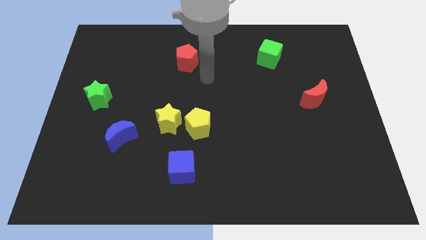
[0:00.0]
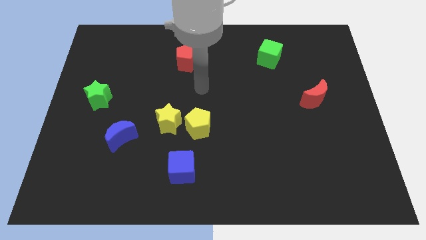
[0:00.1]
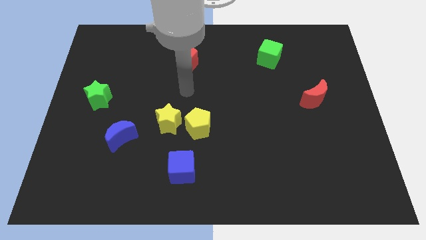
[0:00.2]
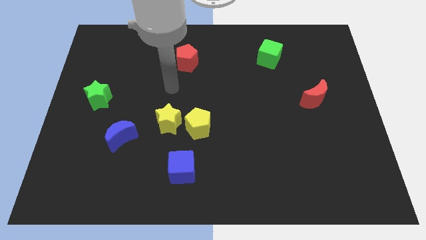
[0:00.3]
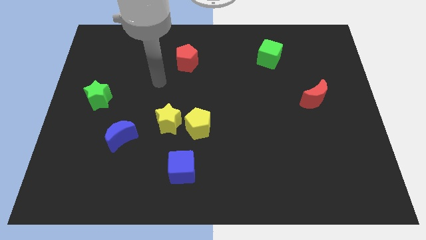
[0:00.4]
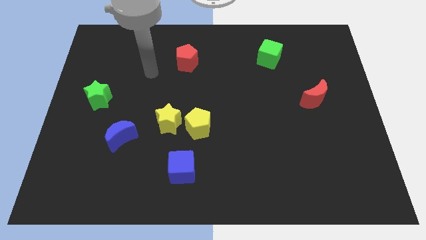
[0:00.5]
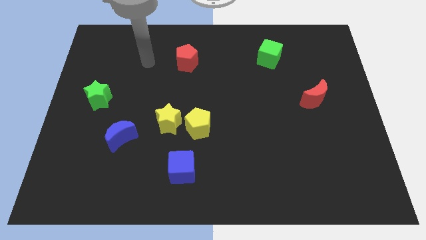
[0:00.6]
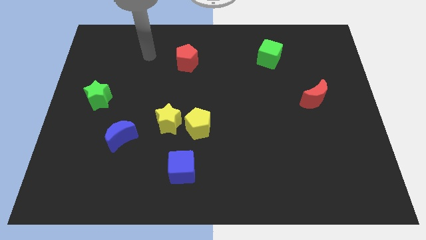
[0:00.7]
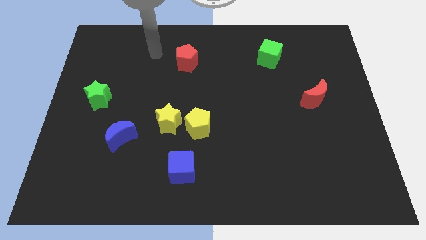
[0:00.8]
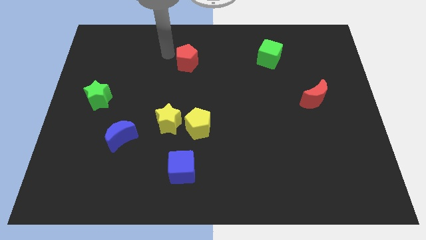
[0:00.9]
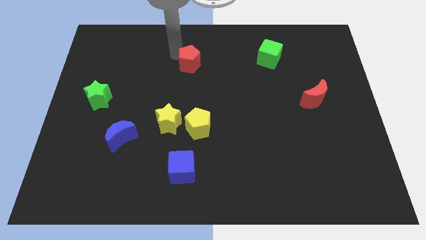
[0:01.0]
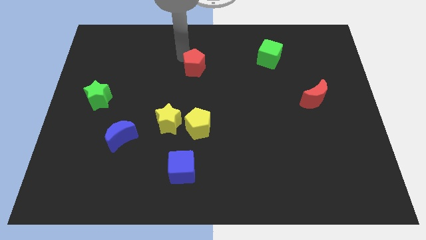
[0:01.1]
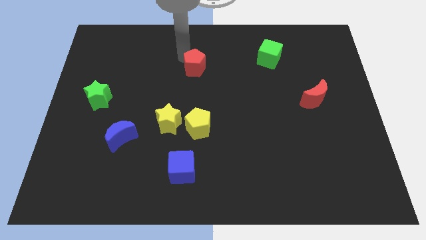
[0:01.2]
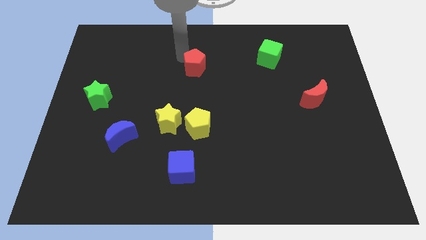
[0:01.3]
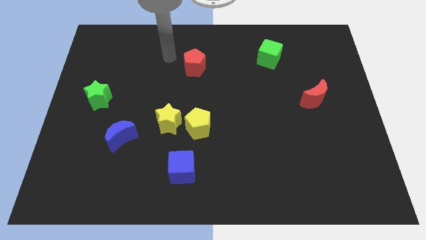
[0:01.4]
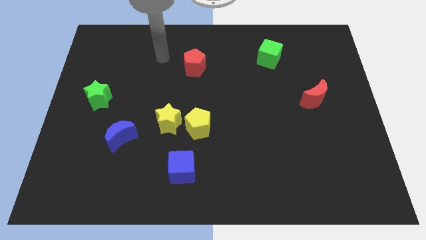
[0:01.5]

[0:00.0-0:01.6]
move the red pentagon above the yellow pentagon

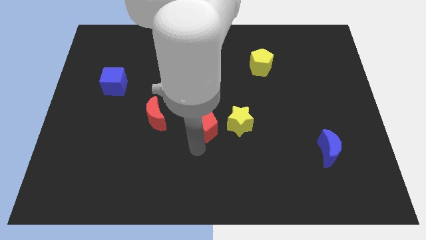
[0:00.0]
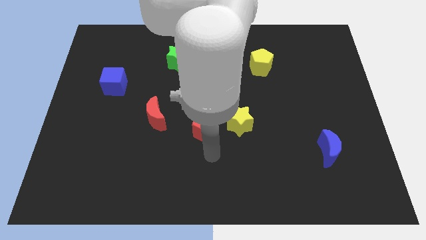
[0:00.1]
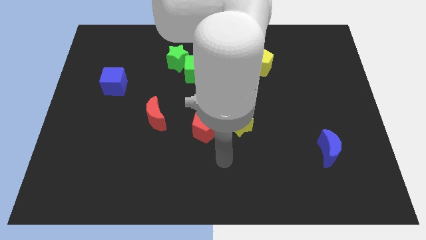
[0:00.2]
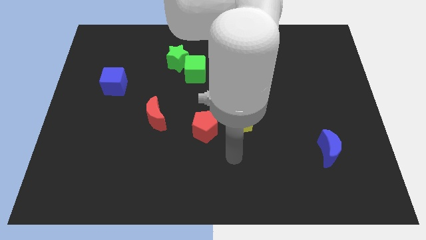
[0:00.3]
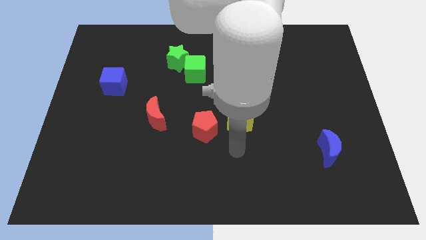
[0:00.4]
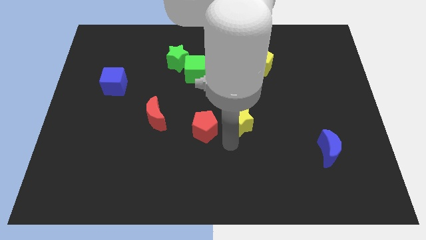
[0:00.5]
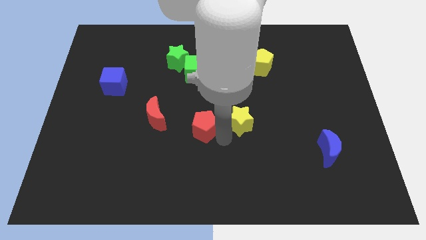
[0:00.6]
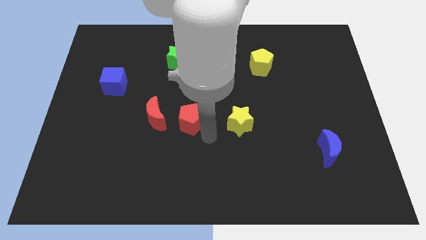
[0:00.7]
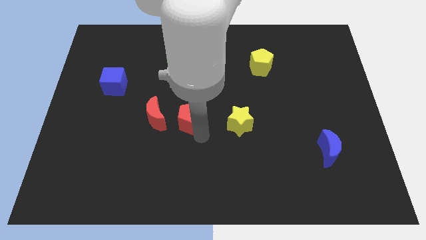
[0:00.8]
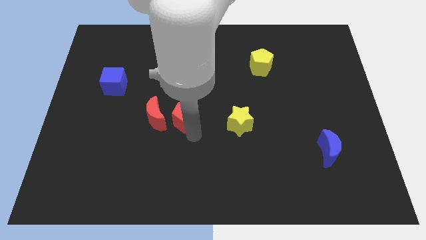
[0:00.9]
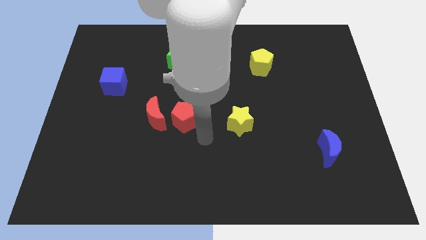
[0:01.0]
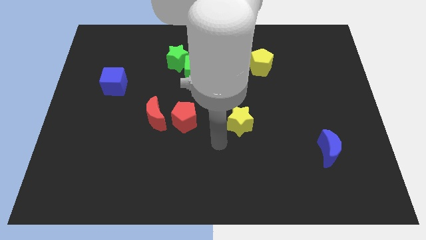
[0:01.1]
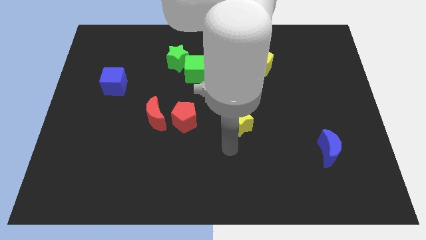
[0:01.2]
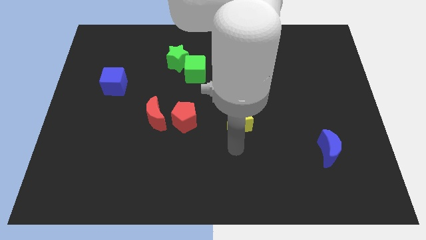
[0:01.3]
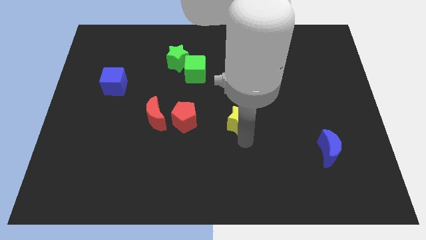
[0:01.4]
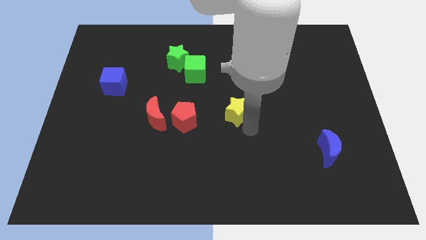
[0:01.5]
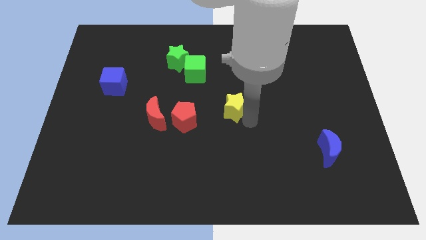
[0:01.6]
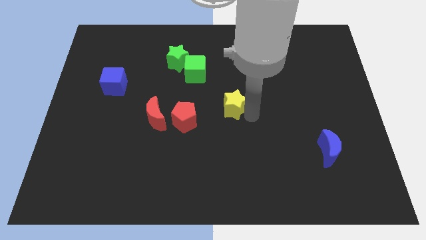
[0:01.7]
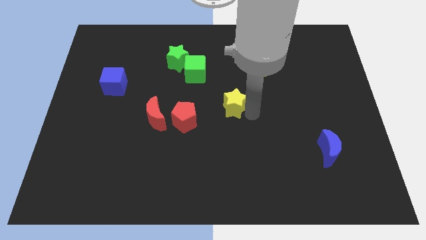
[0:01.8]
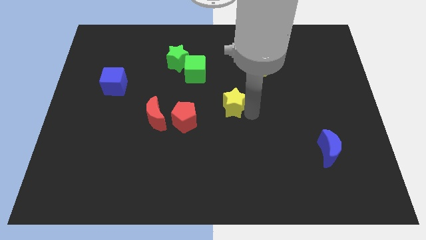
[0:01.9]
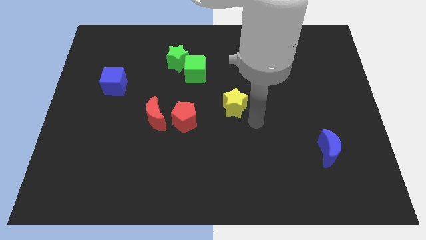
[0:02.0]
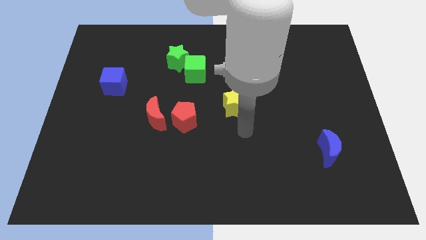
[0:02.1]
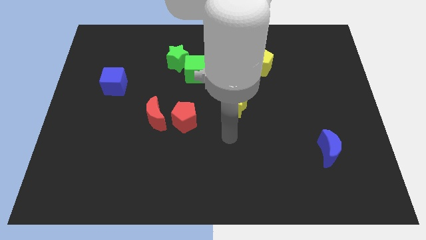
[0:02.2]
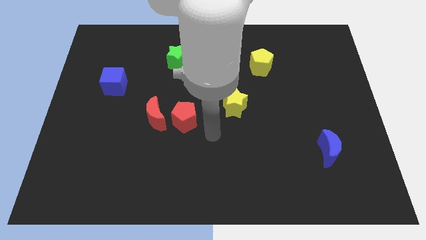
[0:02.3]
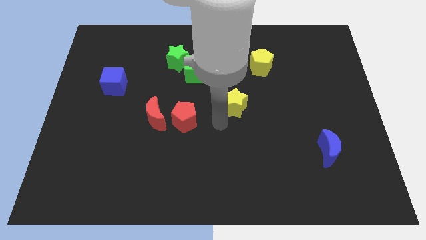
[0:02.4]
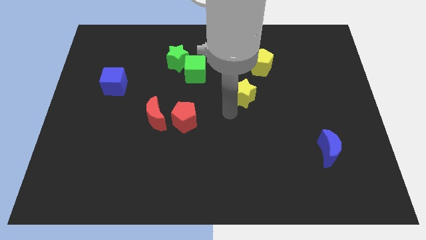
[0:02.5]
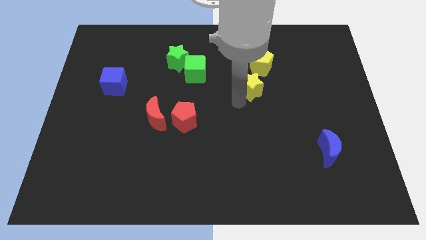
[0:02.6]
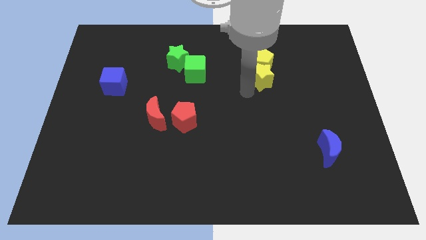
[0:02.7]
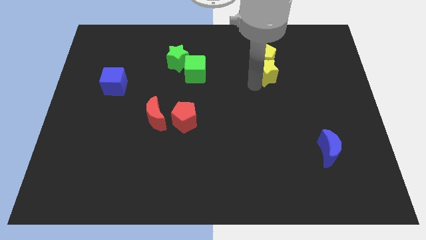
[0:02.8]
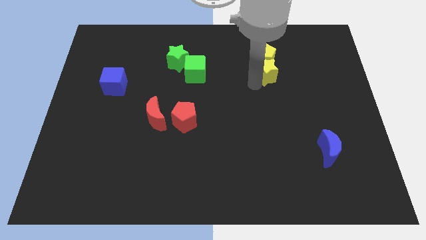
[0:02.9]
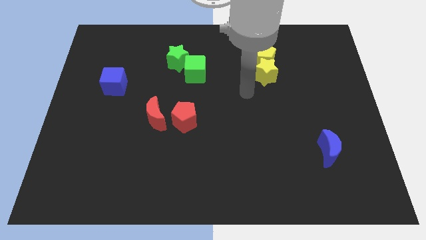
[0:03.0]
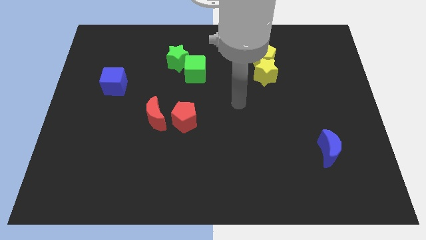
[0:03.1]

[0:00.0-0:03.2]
move yellow star into yellow pentagon

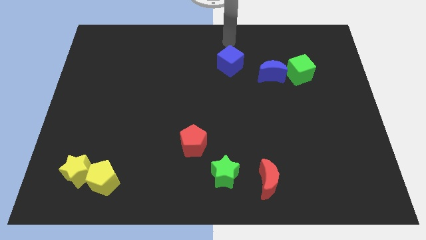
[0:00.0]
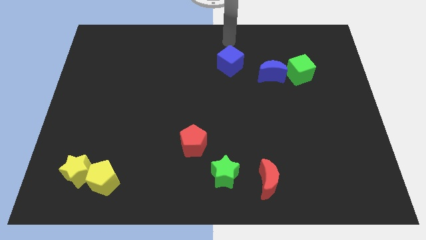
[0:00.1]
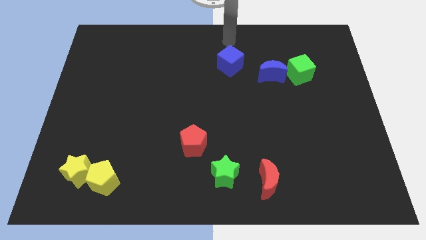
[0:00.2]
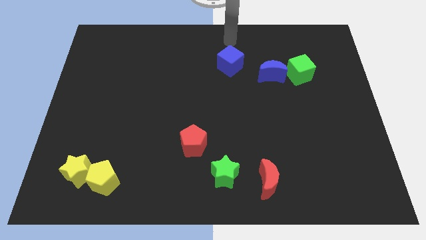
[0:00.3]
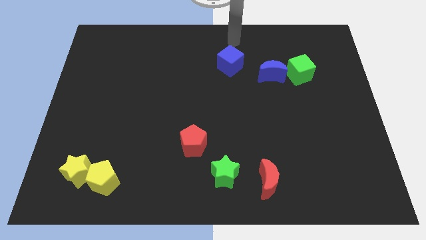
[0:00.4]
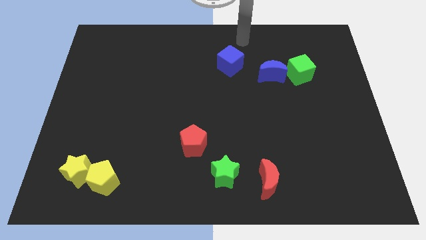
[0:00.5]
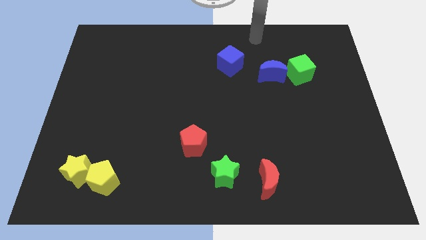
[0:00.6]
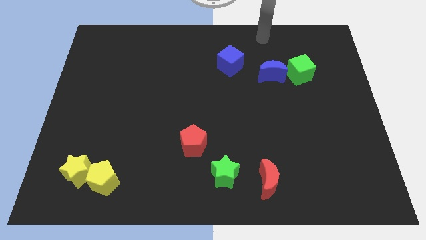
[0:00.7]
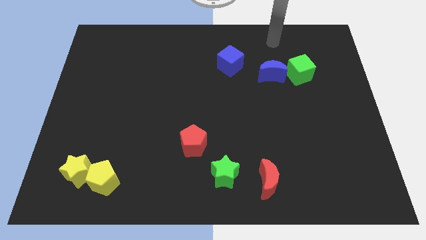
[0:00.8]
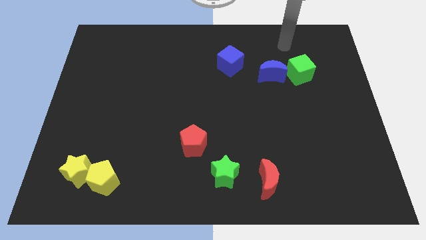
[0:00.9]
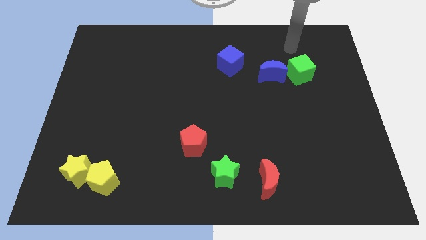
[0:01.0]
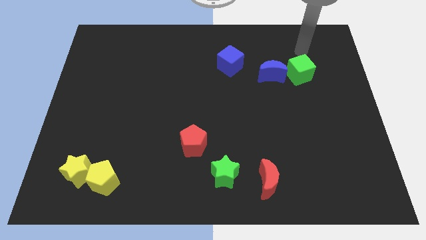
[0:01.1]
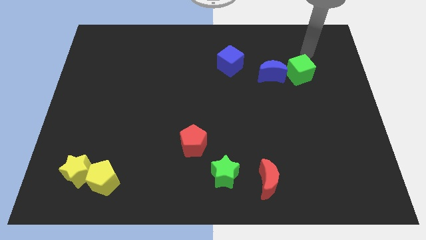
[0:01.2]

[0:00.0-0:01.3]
move your arm to the top of the green cube

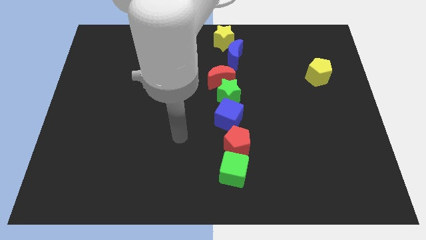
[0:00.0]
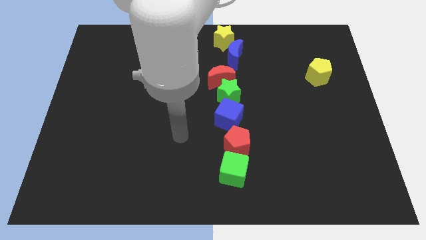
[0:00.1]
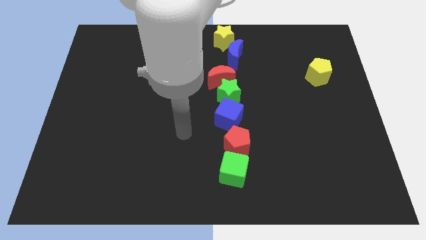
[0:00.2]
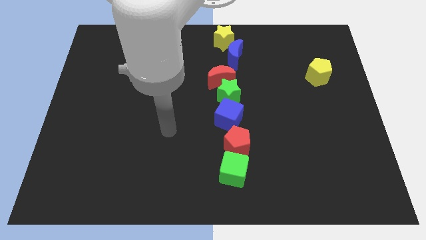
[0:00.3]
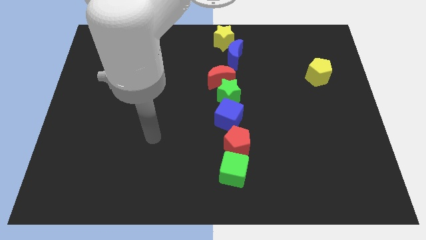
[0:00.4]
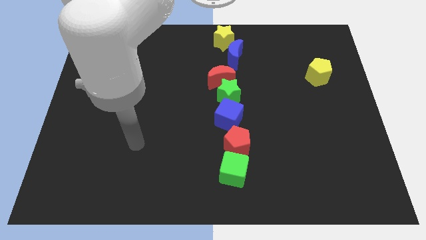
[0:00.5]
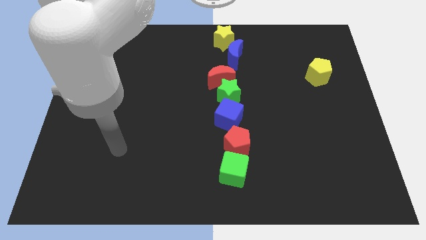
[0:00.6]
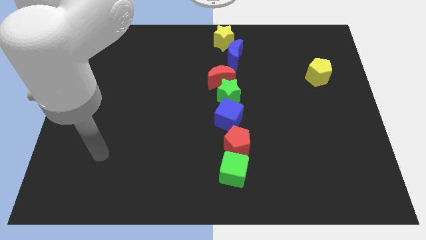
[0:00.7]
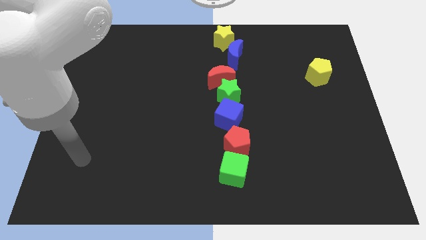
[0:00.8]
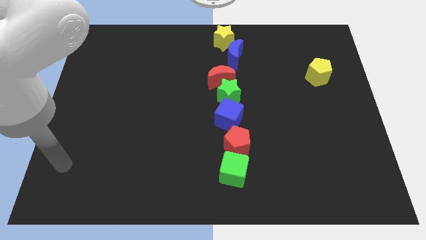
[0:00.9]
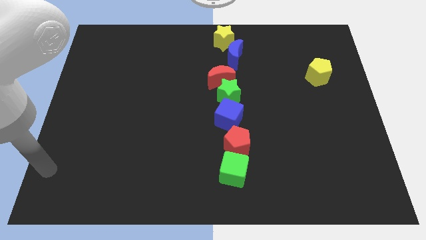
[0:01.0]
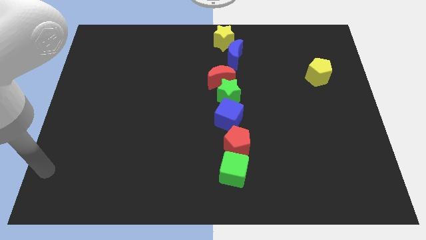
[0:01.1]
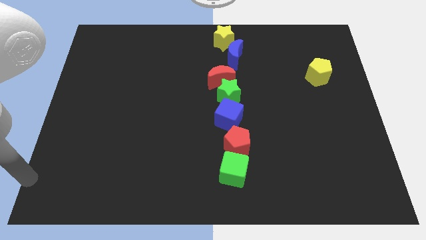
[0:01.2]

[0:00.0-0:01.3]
move your arm to the bottom left side of the board

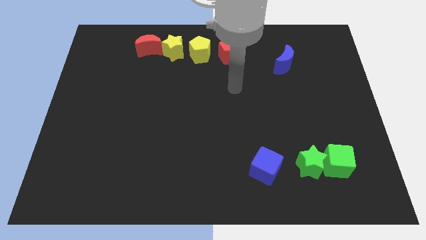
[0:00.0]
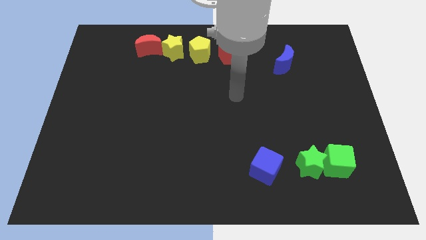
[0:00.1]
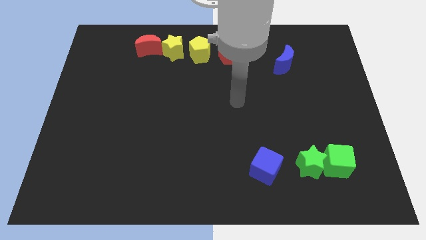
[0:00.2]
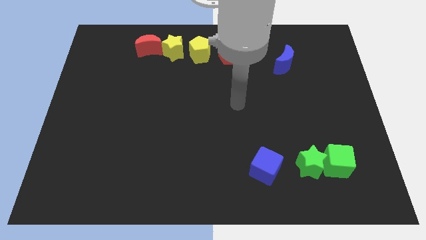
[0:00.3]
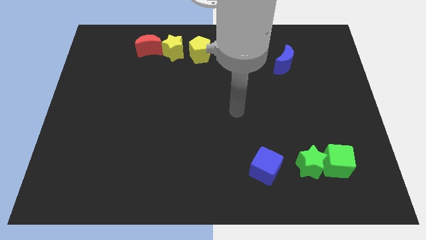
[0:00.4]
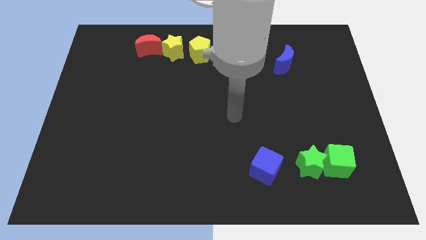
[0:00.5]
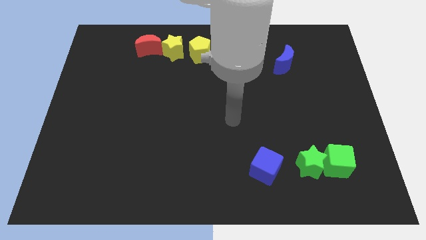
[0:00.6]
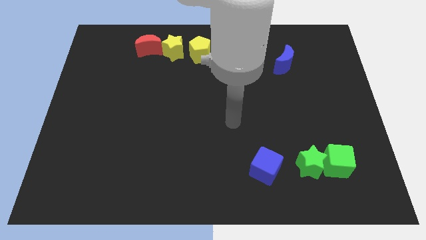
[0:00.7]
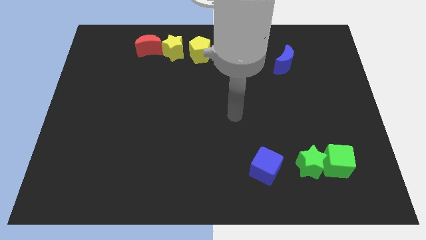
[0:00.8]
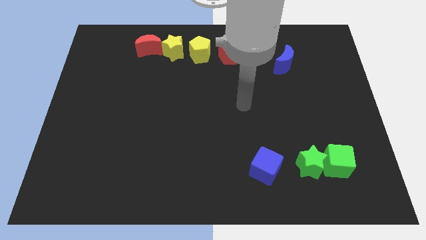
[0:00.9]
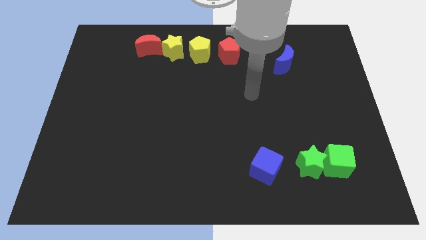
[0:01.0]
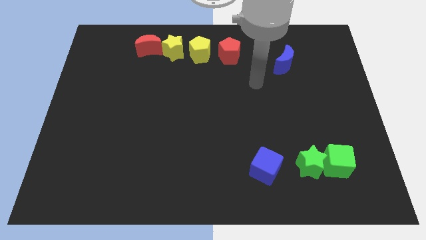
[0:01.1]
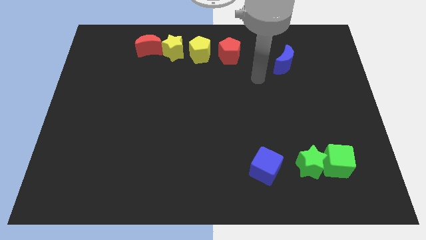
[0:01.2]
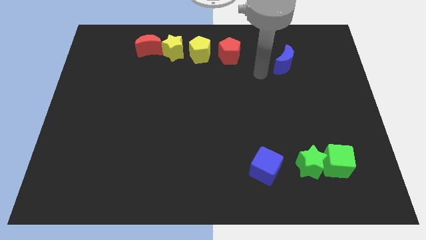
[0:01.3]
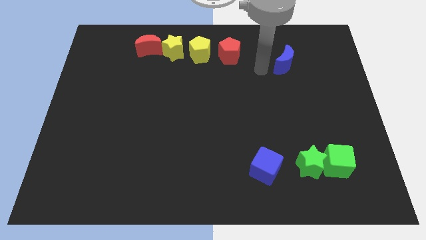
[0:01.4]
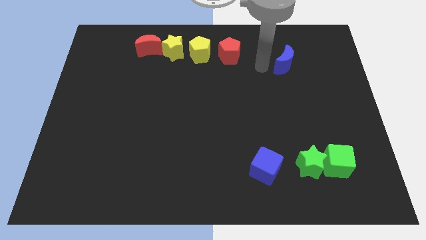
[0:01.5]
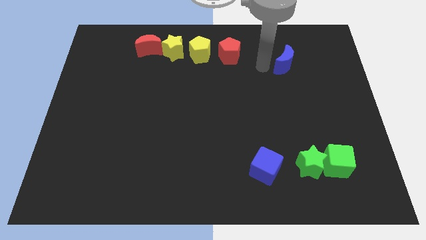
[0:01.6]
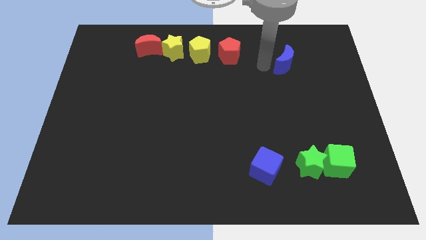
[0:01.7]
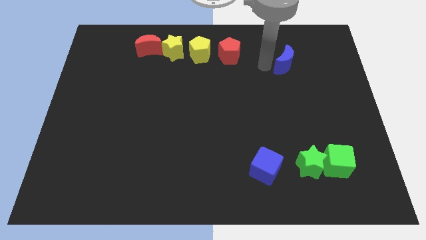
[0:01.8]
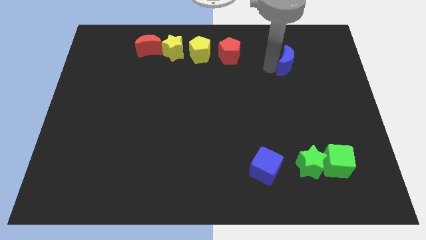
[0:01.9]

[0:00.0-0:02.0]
point your arm at the left of the blue crescent
